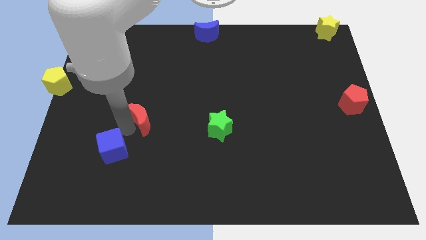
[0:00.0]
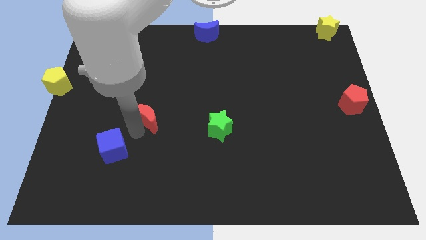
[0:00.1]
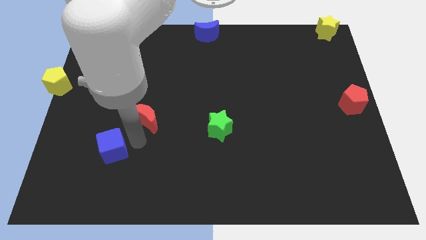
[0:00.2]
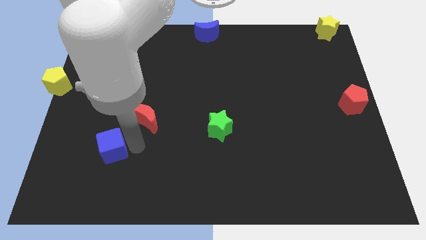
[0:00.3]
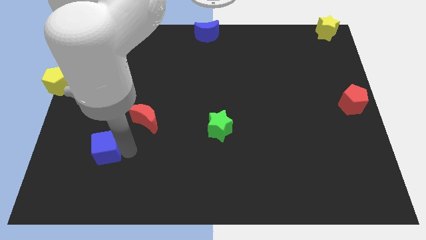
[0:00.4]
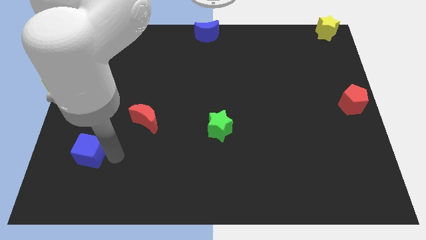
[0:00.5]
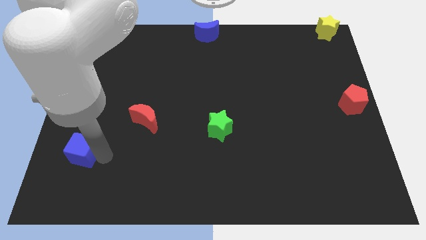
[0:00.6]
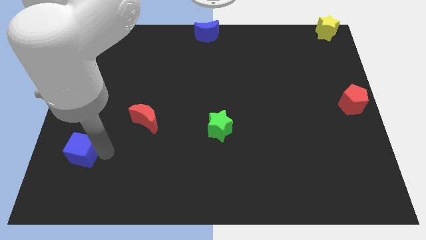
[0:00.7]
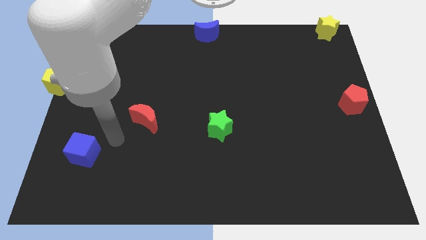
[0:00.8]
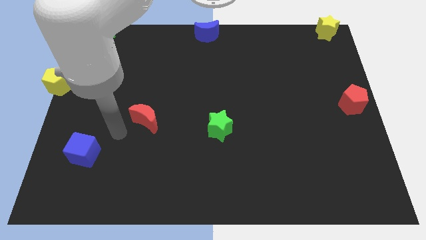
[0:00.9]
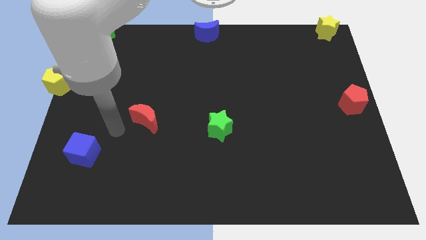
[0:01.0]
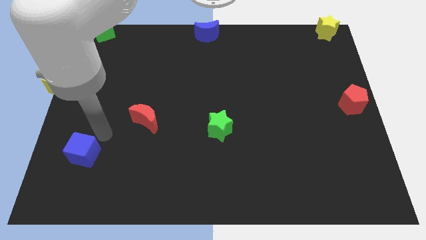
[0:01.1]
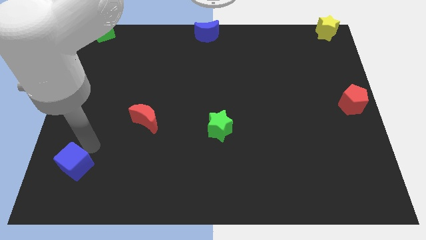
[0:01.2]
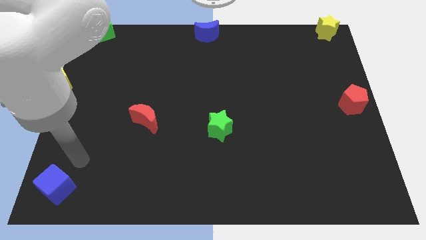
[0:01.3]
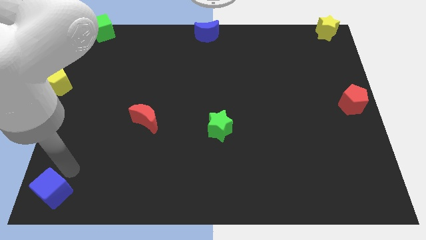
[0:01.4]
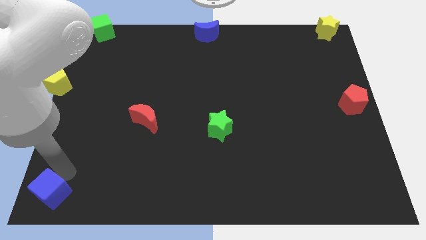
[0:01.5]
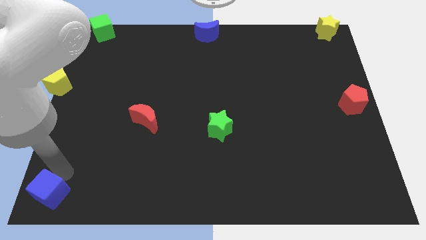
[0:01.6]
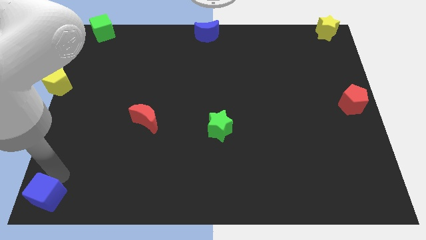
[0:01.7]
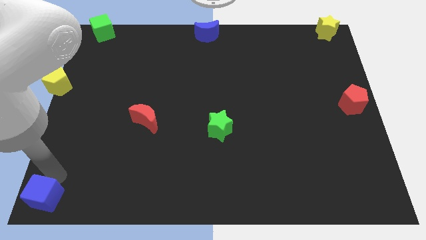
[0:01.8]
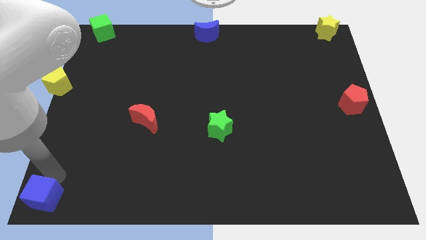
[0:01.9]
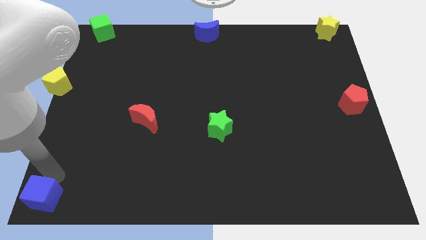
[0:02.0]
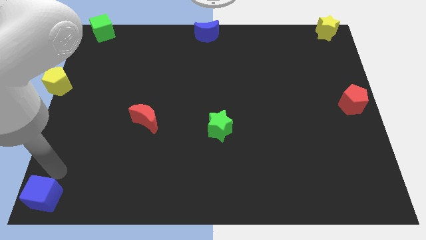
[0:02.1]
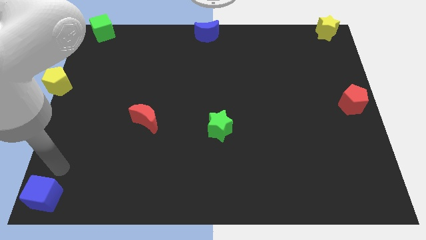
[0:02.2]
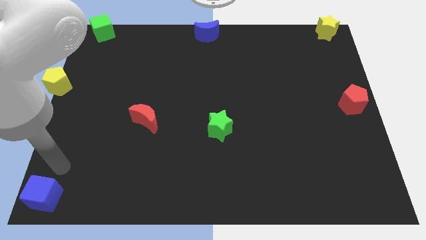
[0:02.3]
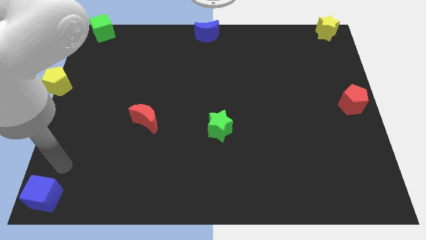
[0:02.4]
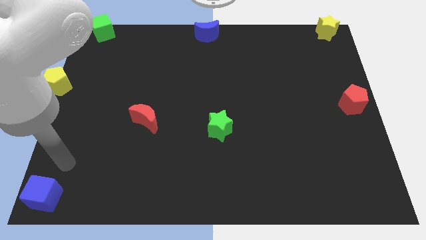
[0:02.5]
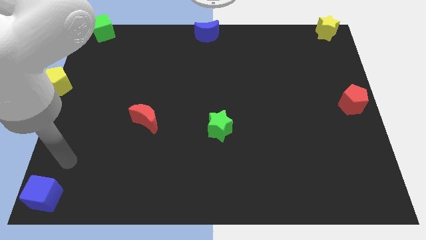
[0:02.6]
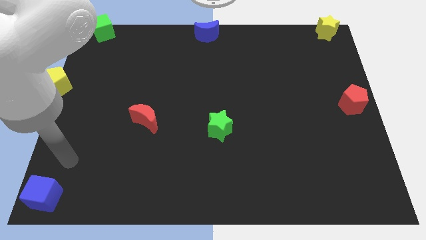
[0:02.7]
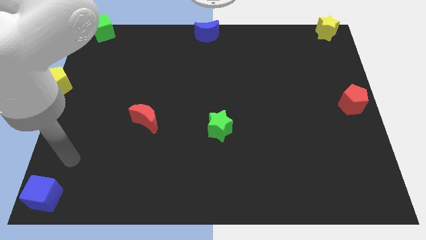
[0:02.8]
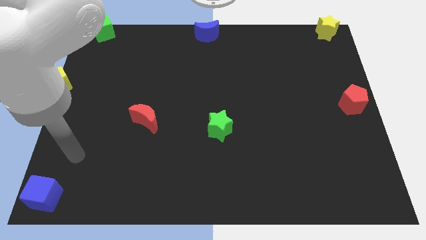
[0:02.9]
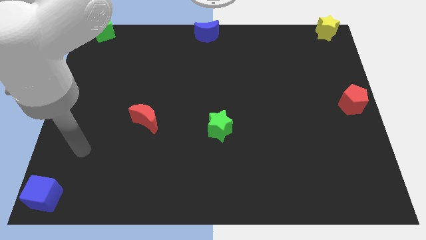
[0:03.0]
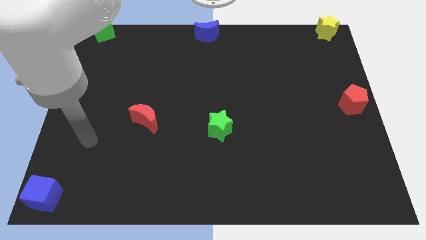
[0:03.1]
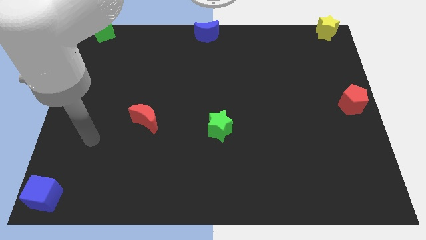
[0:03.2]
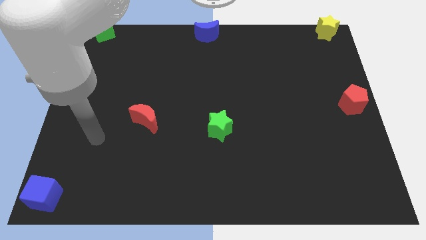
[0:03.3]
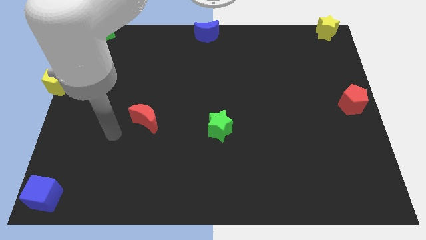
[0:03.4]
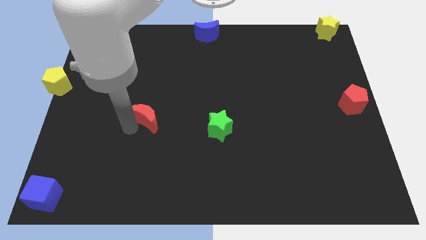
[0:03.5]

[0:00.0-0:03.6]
place the blue cube at the bottom left corner of the board

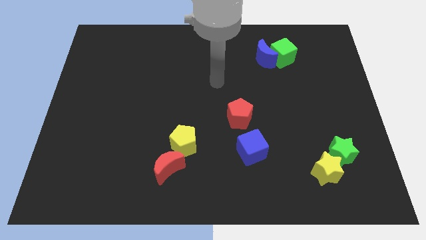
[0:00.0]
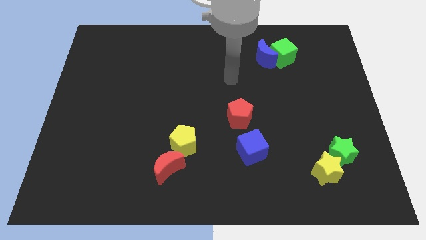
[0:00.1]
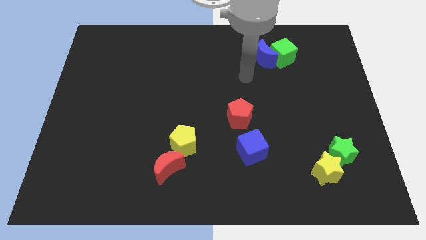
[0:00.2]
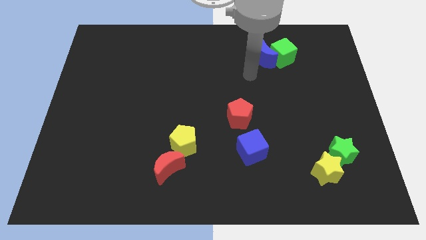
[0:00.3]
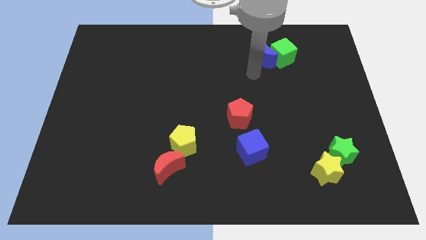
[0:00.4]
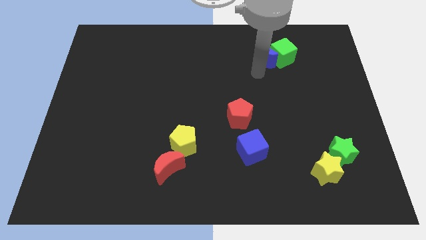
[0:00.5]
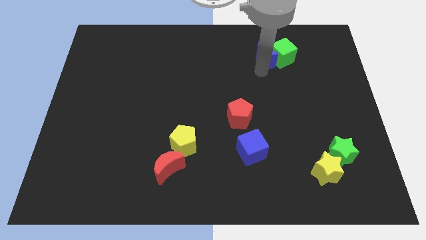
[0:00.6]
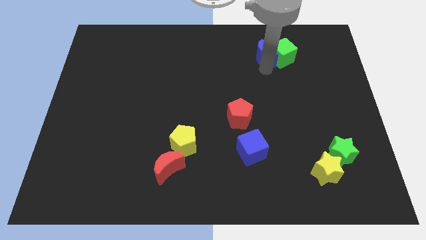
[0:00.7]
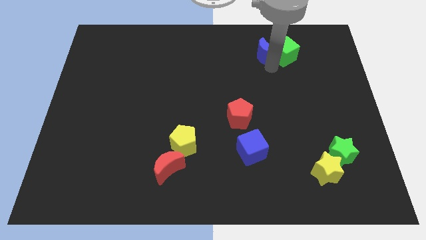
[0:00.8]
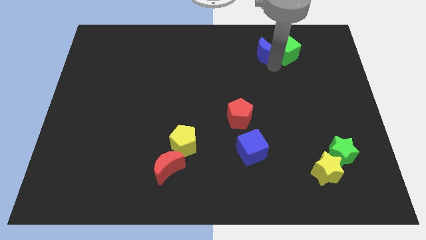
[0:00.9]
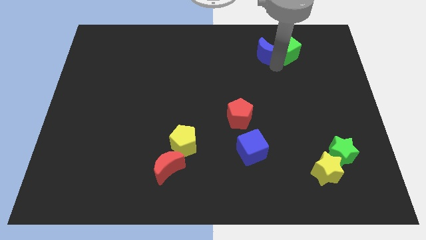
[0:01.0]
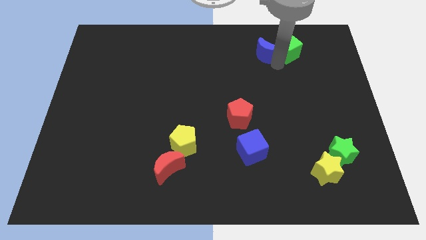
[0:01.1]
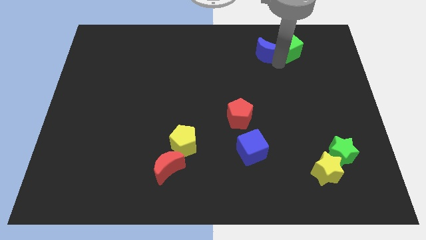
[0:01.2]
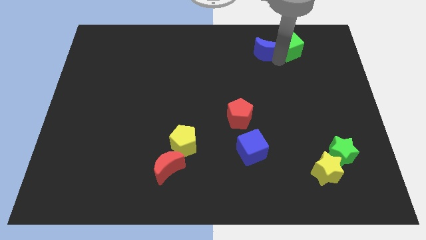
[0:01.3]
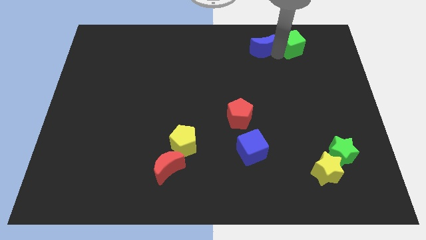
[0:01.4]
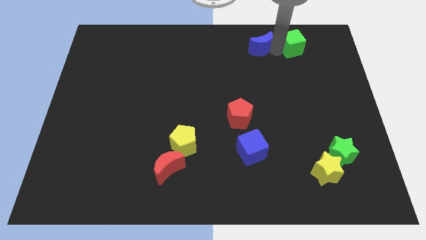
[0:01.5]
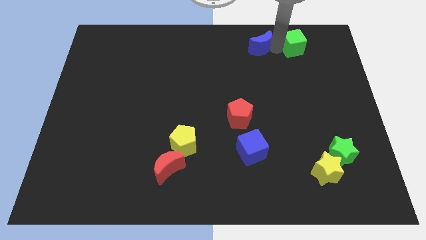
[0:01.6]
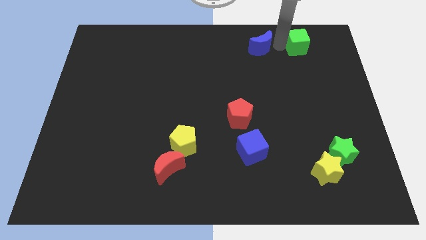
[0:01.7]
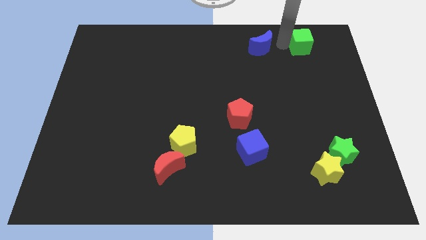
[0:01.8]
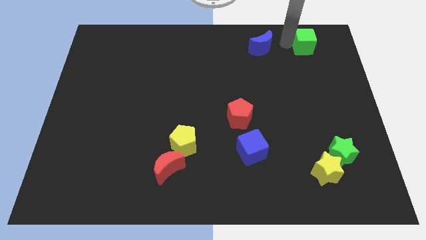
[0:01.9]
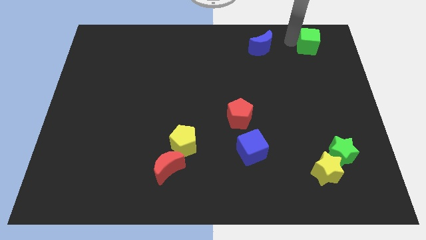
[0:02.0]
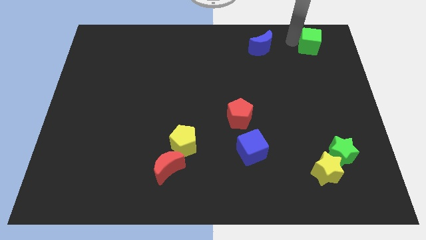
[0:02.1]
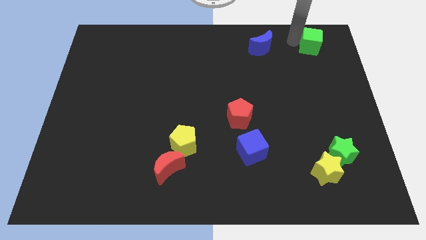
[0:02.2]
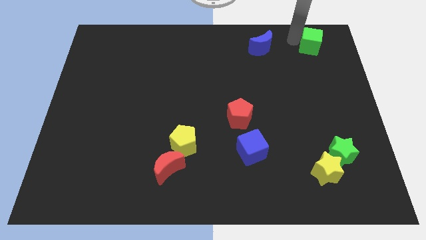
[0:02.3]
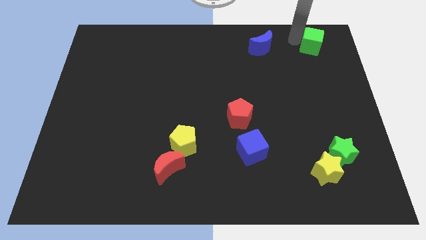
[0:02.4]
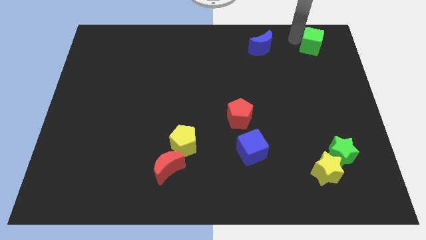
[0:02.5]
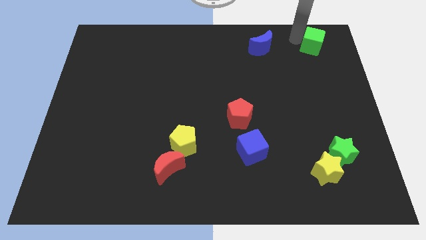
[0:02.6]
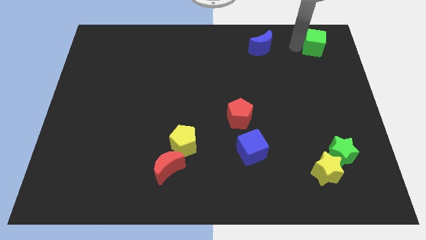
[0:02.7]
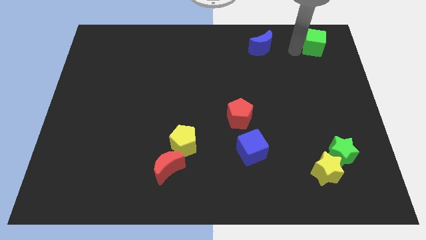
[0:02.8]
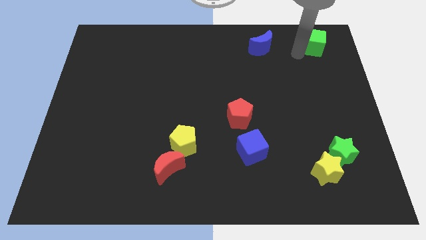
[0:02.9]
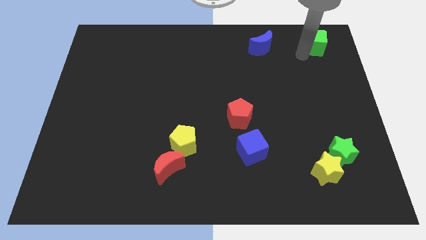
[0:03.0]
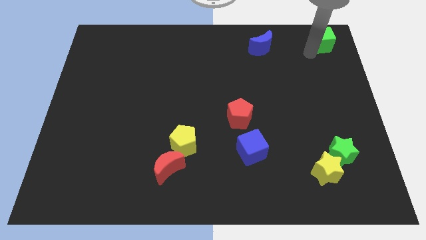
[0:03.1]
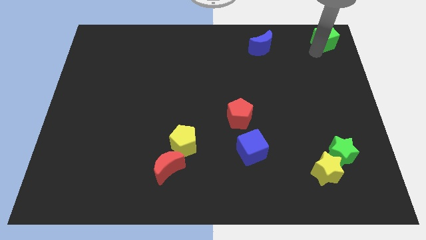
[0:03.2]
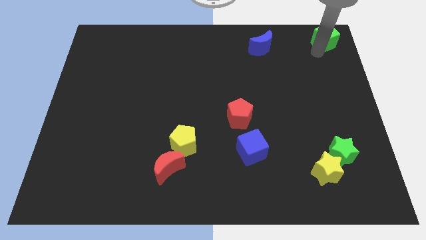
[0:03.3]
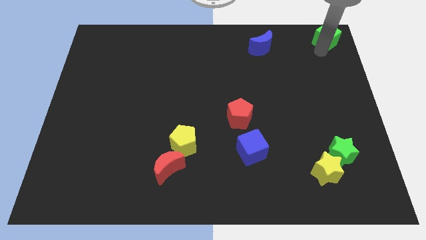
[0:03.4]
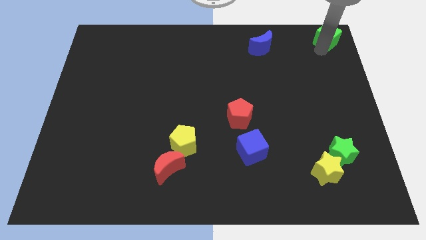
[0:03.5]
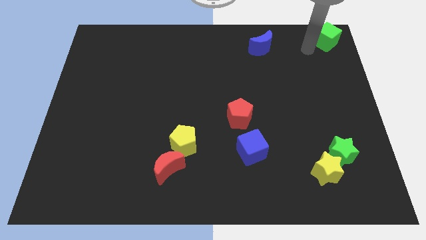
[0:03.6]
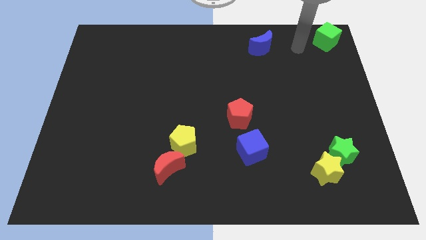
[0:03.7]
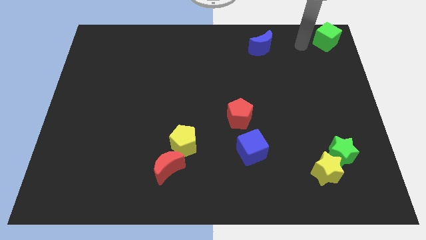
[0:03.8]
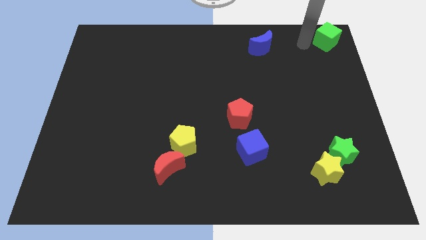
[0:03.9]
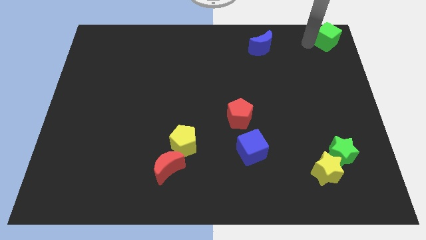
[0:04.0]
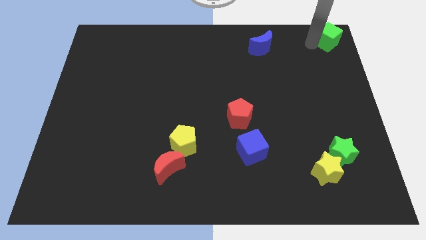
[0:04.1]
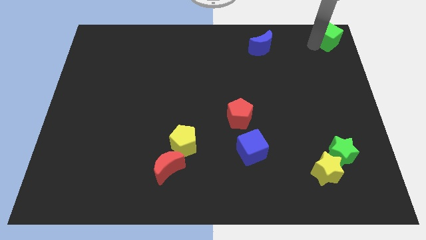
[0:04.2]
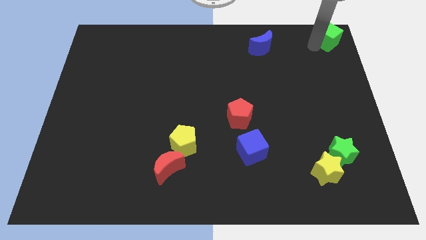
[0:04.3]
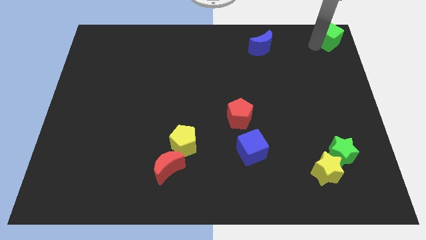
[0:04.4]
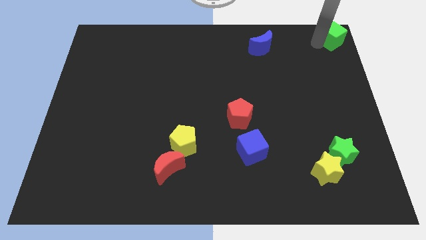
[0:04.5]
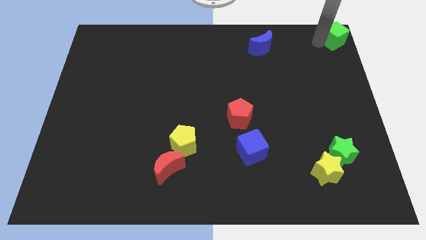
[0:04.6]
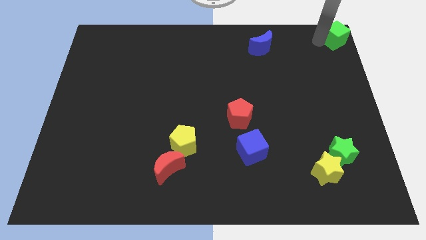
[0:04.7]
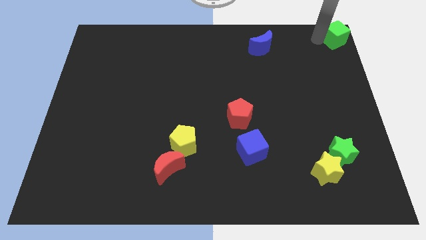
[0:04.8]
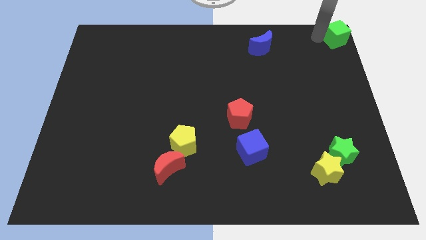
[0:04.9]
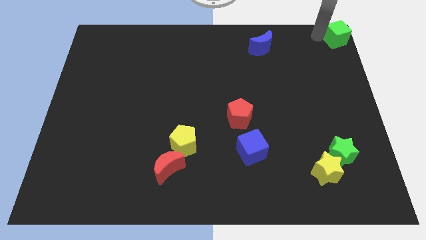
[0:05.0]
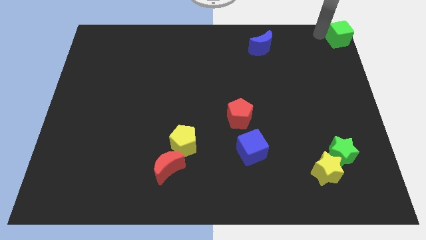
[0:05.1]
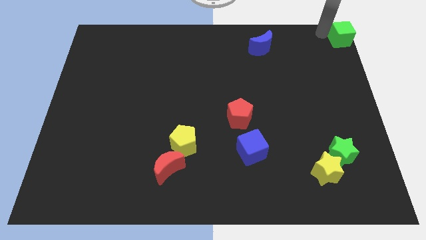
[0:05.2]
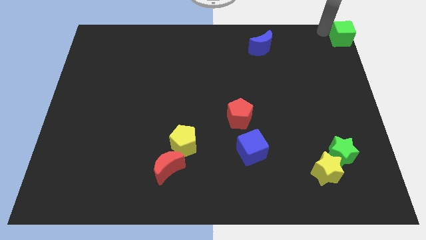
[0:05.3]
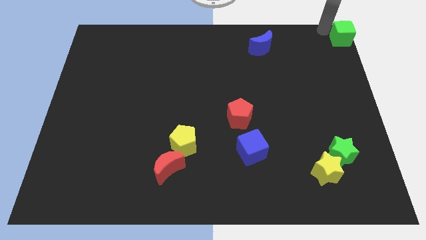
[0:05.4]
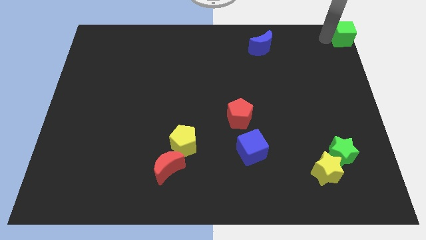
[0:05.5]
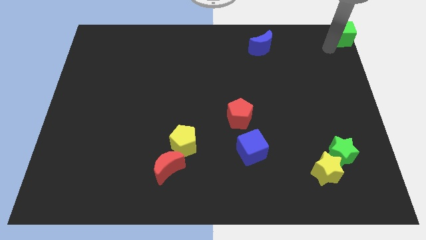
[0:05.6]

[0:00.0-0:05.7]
move the green cube to the top right
